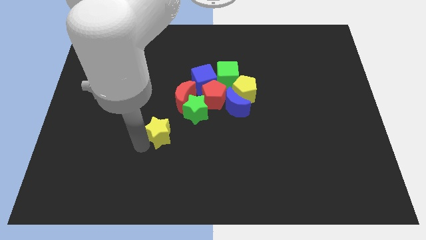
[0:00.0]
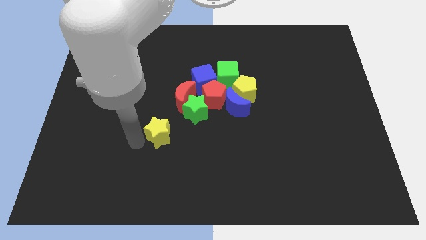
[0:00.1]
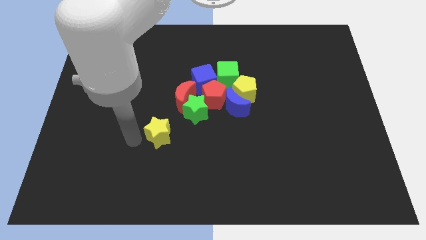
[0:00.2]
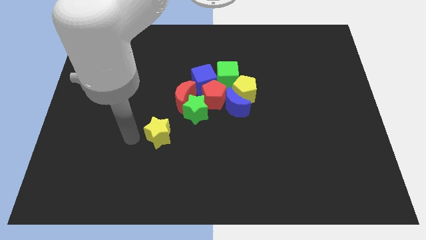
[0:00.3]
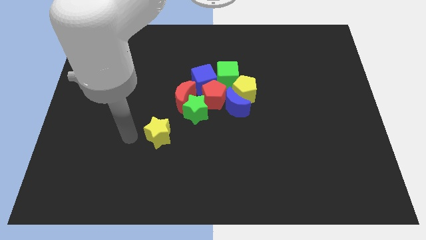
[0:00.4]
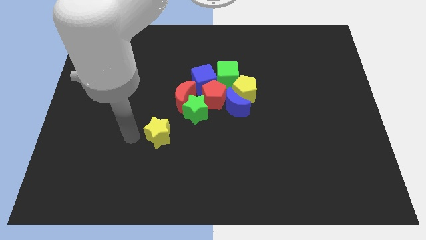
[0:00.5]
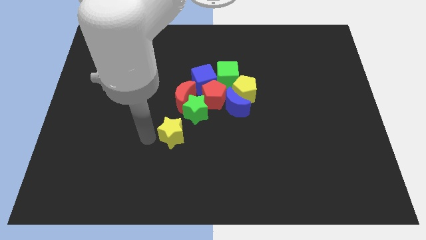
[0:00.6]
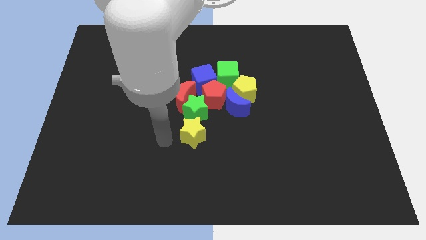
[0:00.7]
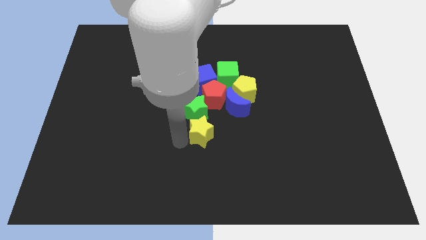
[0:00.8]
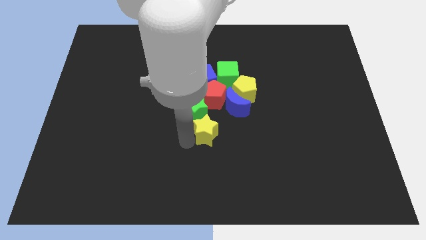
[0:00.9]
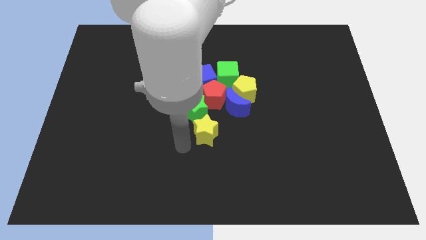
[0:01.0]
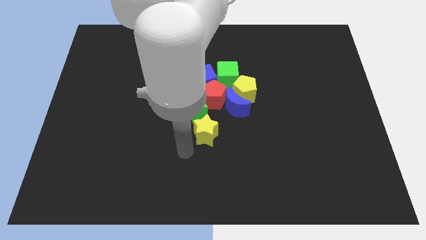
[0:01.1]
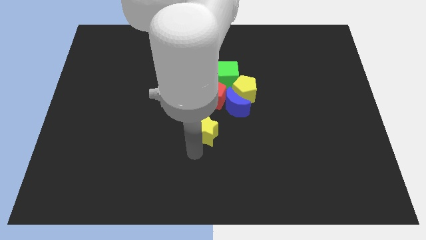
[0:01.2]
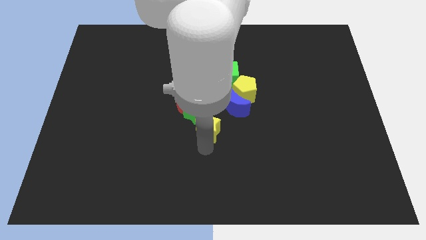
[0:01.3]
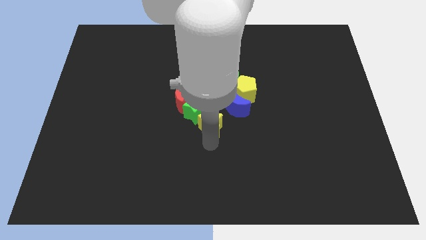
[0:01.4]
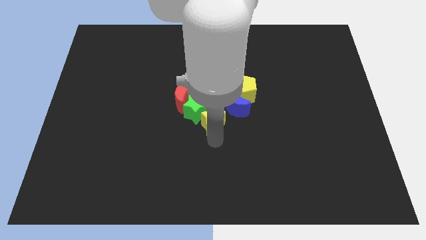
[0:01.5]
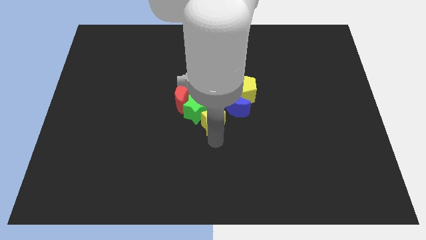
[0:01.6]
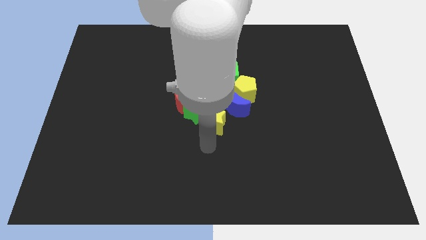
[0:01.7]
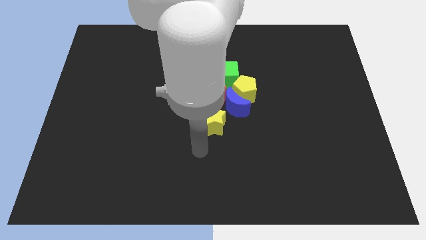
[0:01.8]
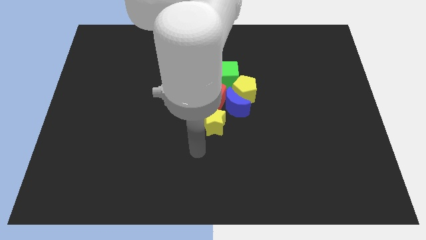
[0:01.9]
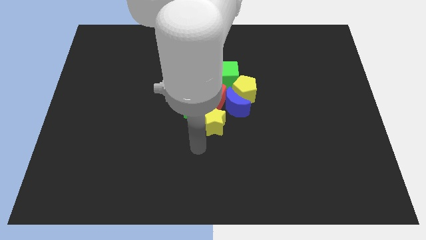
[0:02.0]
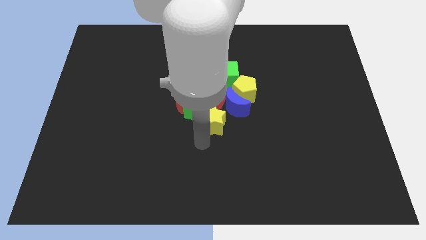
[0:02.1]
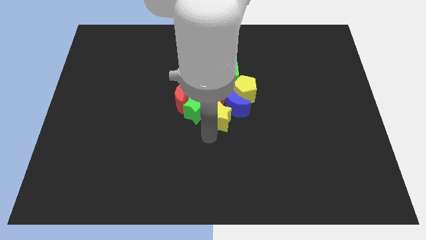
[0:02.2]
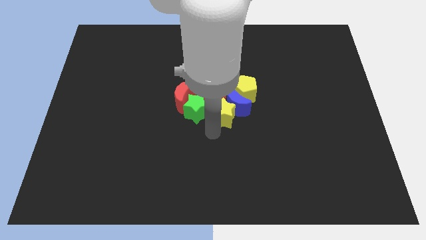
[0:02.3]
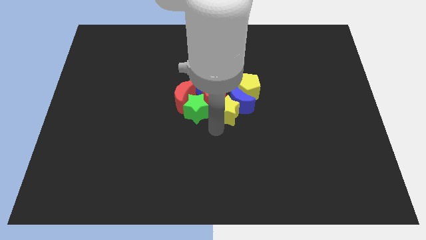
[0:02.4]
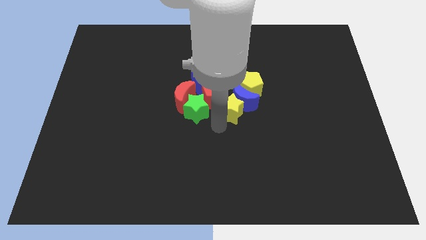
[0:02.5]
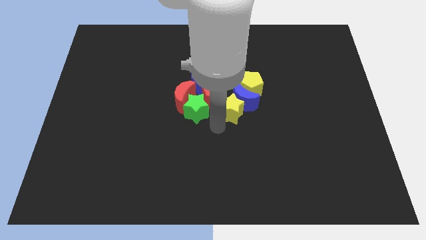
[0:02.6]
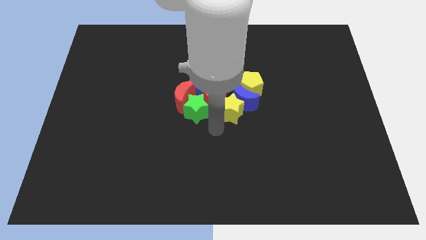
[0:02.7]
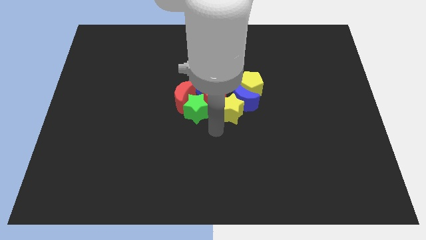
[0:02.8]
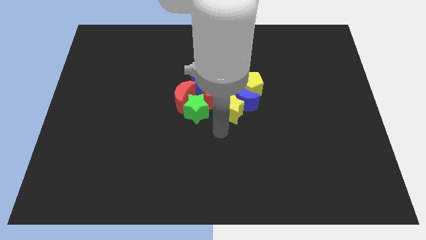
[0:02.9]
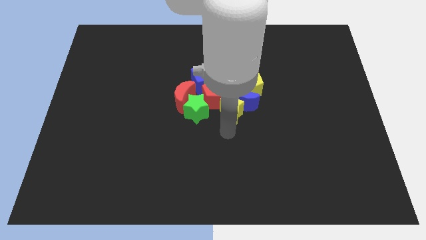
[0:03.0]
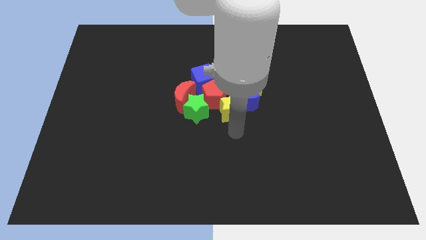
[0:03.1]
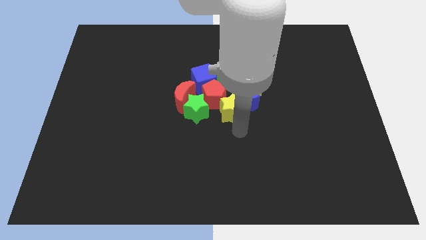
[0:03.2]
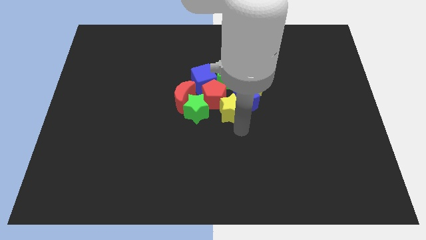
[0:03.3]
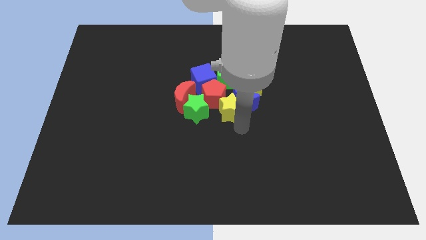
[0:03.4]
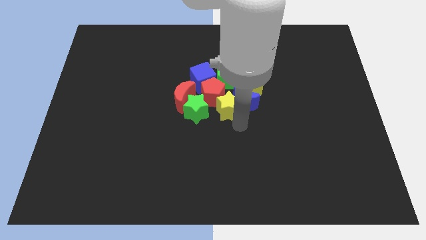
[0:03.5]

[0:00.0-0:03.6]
push yellow star in to blue moon

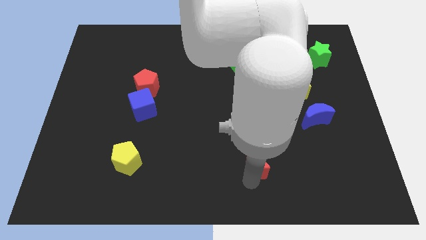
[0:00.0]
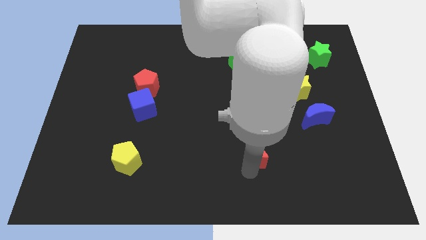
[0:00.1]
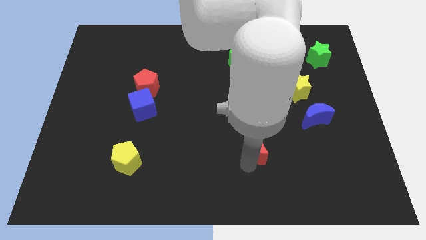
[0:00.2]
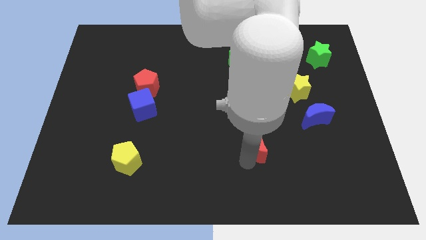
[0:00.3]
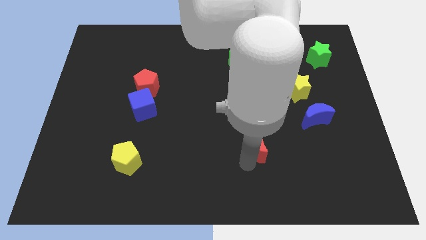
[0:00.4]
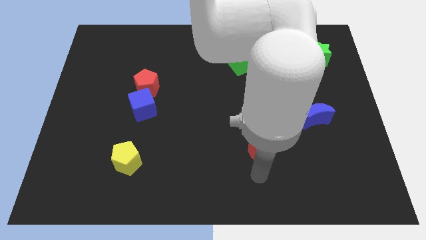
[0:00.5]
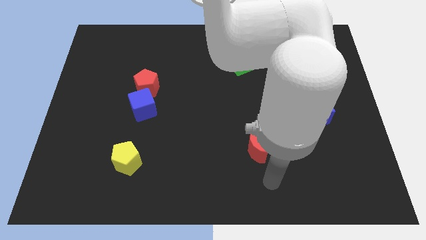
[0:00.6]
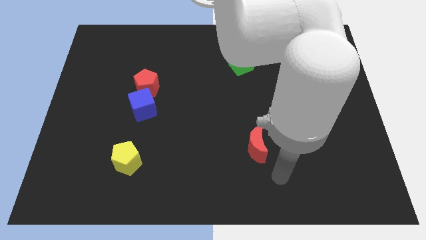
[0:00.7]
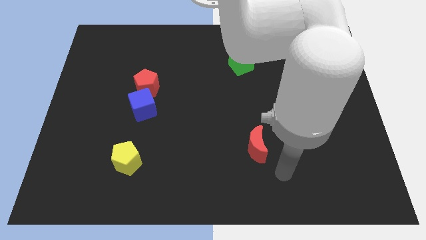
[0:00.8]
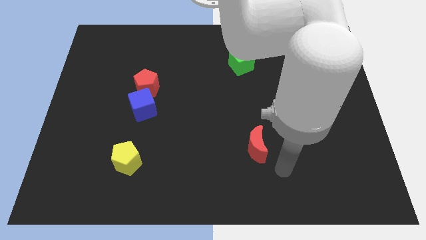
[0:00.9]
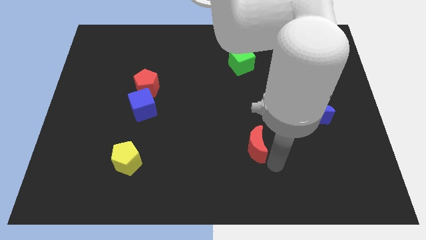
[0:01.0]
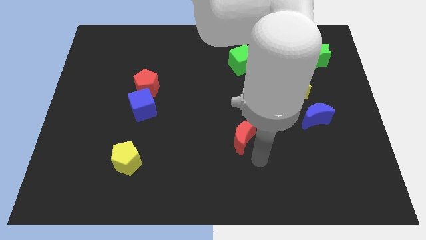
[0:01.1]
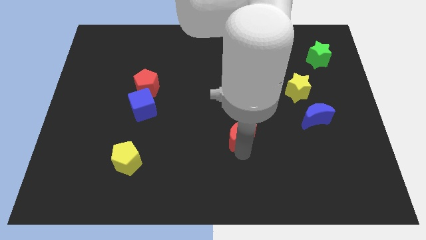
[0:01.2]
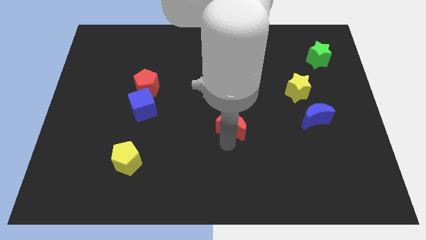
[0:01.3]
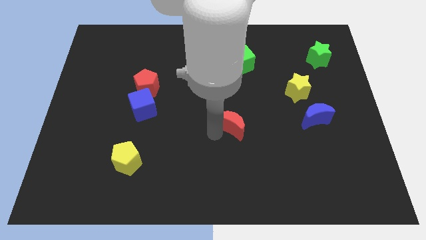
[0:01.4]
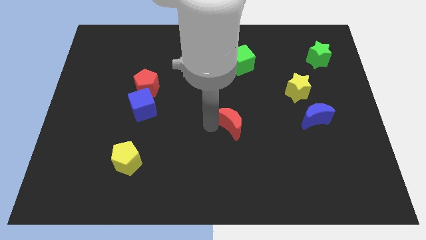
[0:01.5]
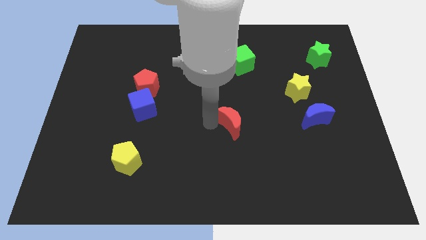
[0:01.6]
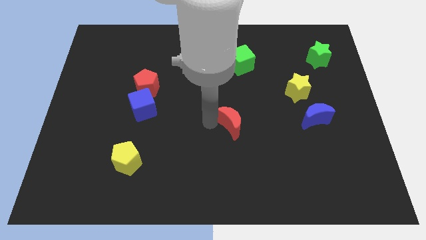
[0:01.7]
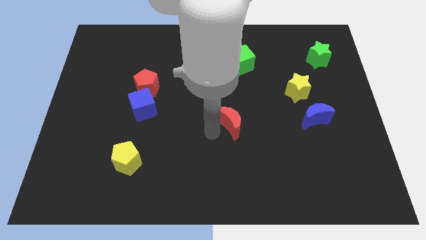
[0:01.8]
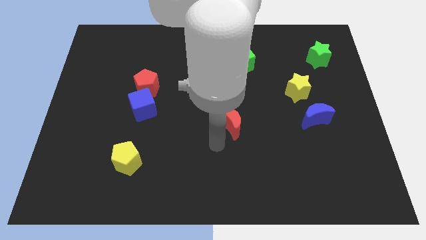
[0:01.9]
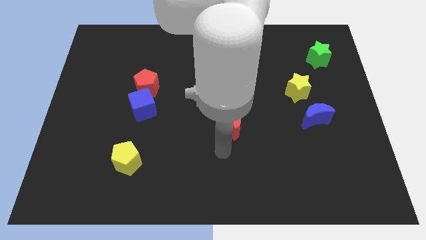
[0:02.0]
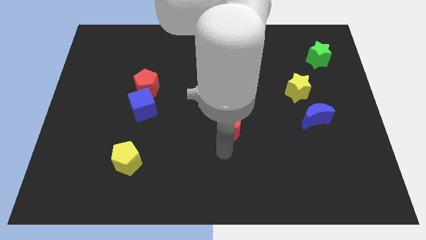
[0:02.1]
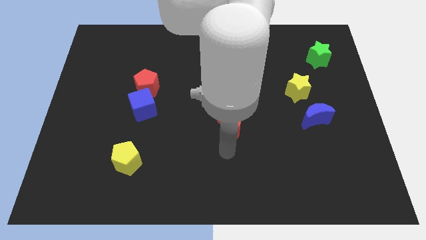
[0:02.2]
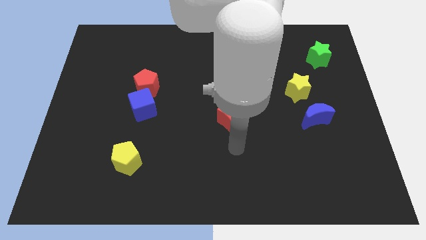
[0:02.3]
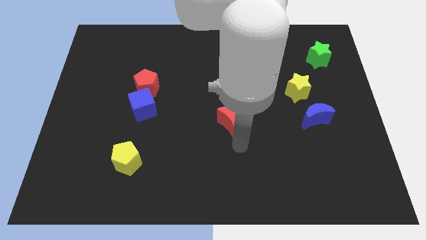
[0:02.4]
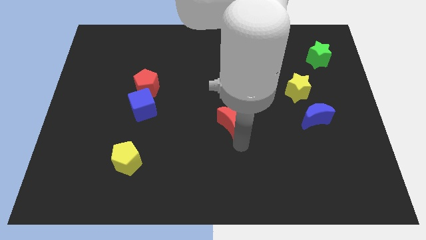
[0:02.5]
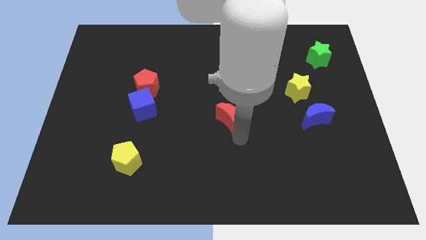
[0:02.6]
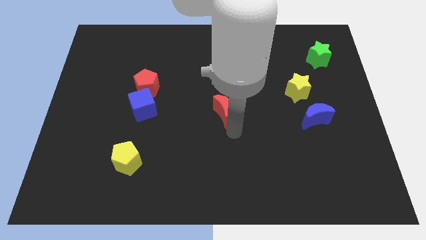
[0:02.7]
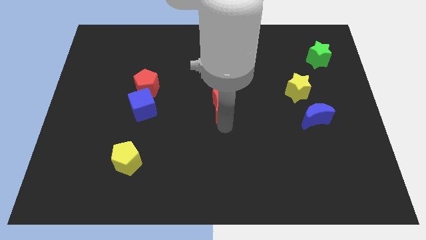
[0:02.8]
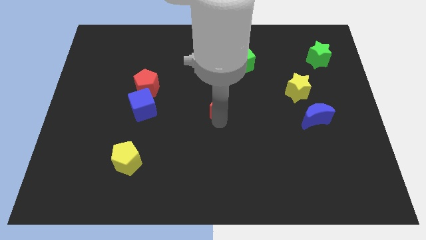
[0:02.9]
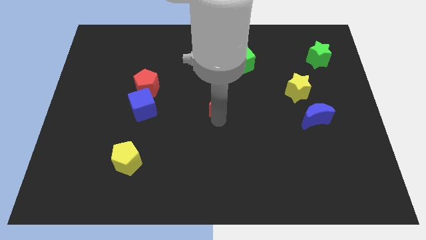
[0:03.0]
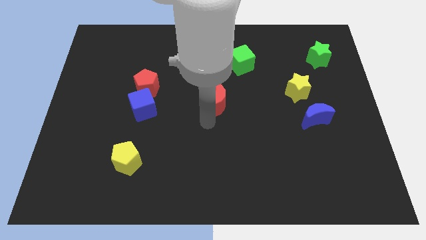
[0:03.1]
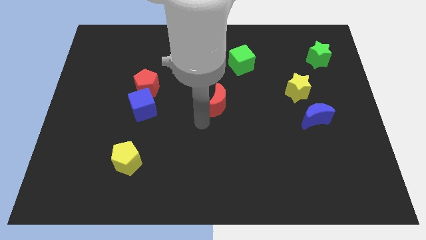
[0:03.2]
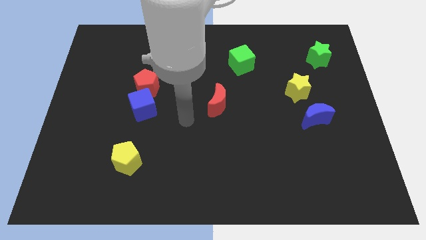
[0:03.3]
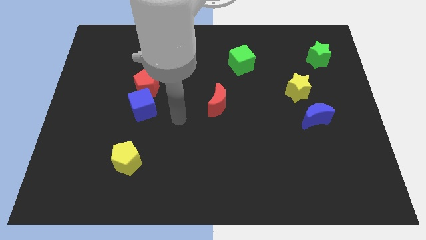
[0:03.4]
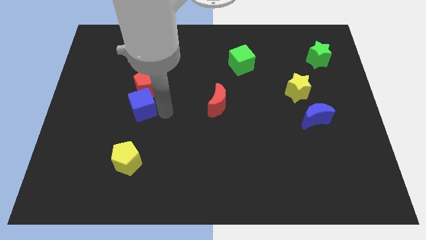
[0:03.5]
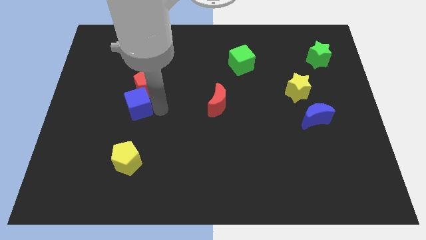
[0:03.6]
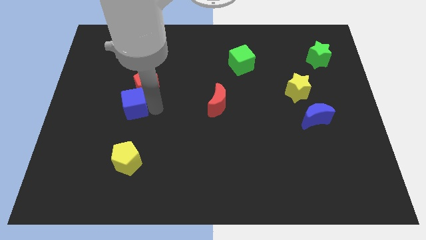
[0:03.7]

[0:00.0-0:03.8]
place red moon to the bottom left of green cube

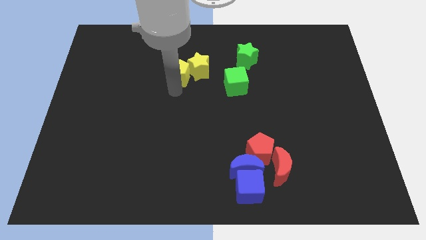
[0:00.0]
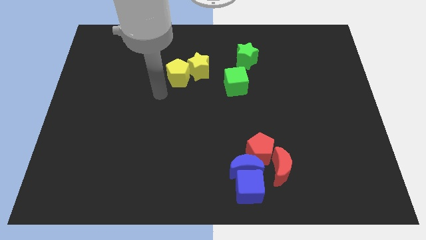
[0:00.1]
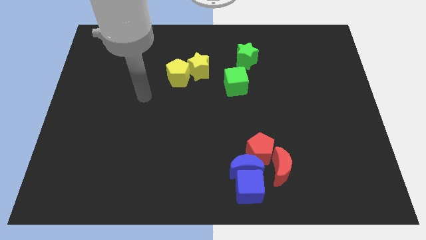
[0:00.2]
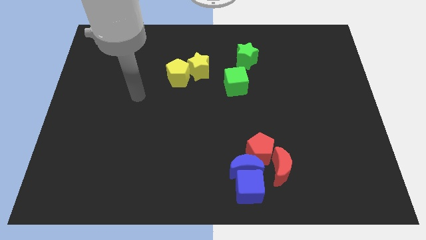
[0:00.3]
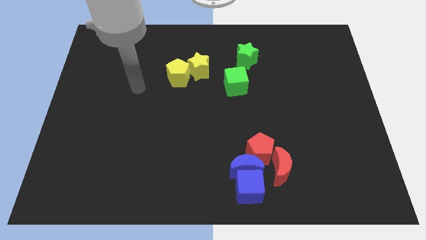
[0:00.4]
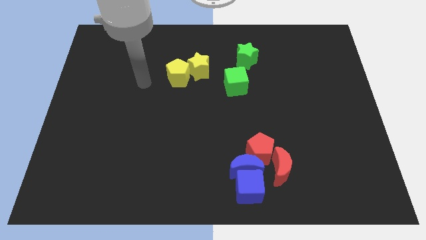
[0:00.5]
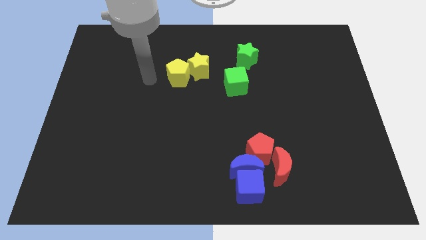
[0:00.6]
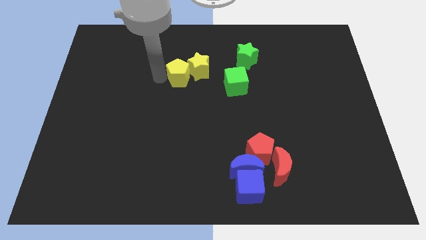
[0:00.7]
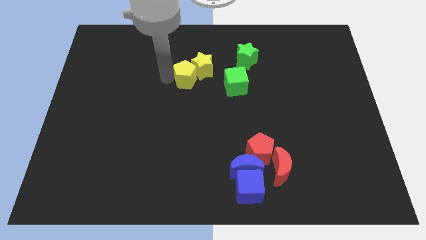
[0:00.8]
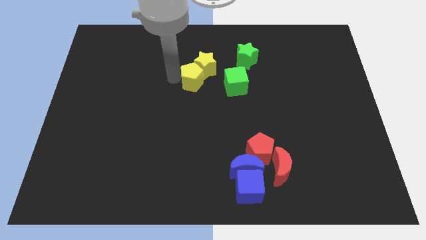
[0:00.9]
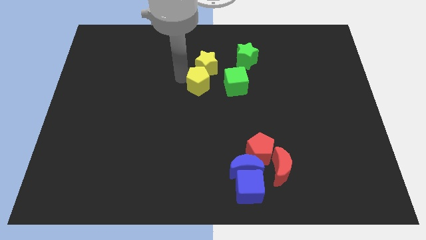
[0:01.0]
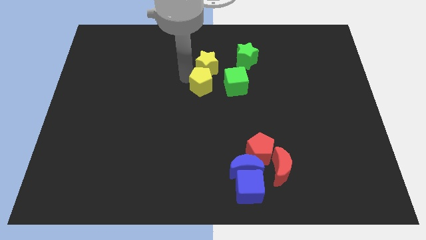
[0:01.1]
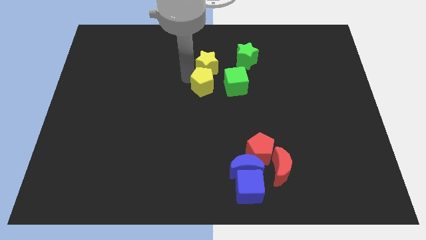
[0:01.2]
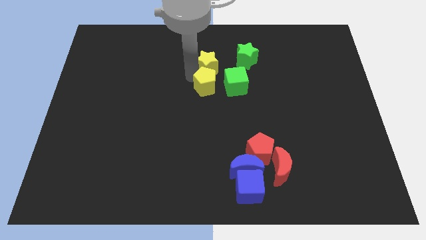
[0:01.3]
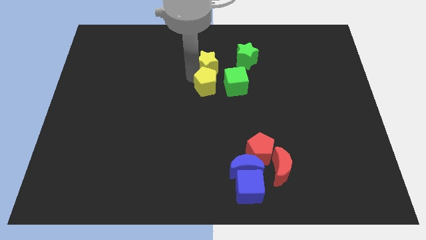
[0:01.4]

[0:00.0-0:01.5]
place the yellow pentagon at the left side of the green cube

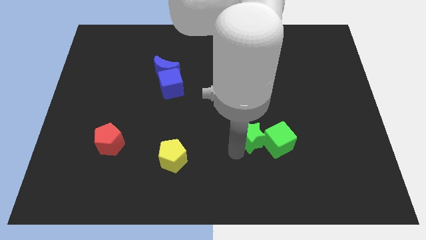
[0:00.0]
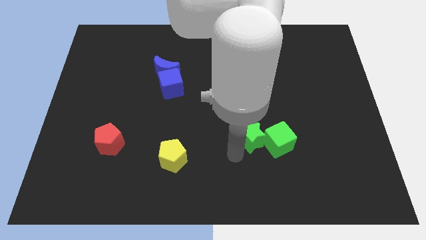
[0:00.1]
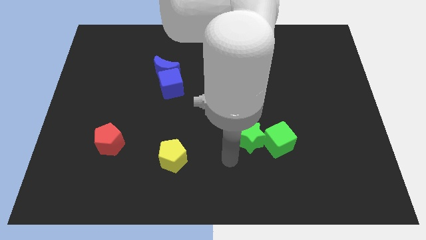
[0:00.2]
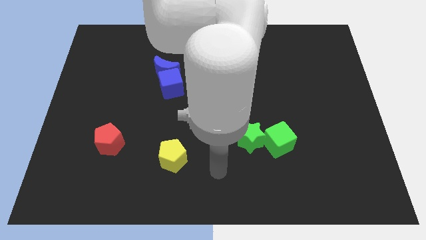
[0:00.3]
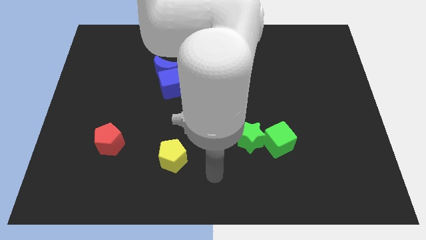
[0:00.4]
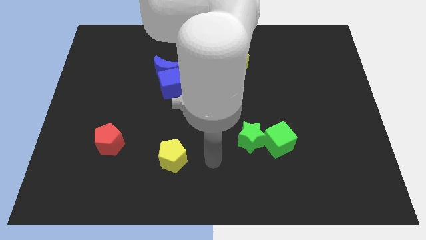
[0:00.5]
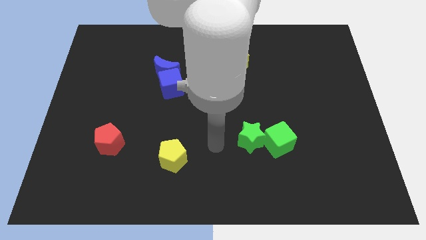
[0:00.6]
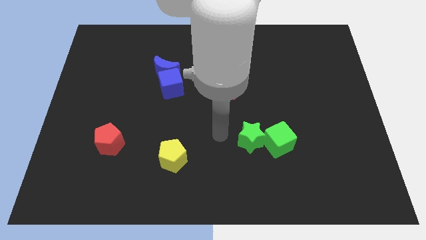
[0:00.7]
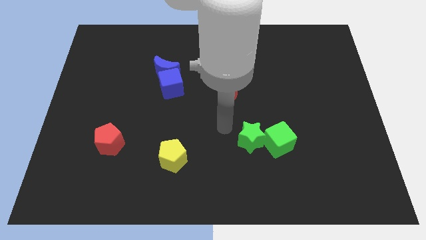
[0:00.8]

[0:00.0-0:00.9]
move the arm away from the green star
